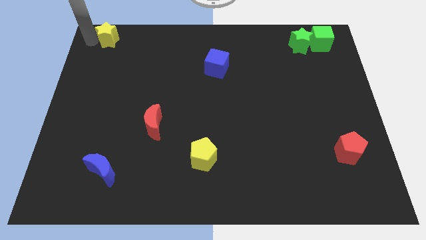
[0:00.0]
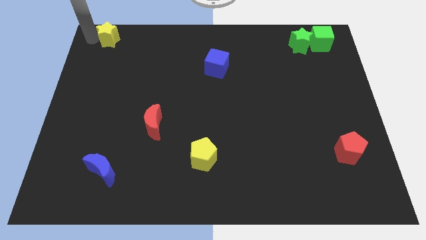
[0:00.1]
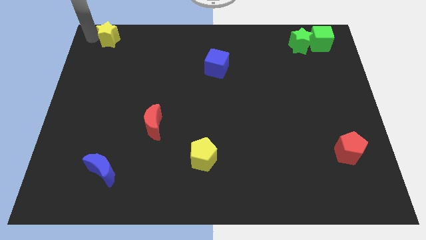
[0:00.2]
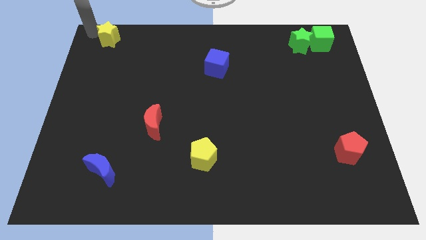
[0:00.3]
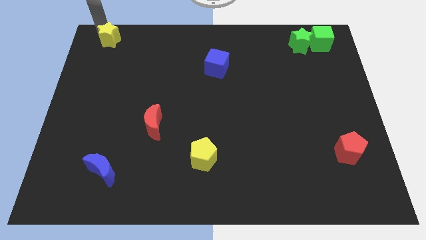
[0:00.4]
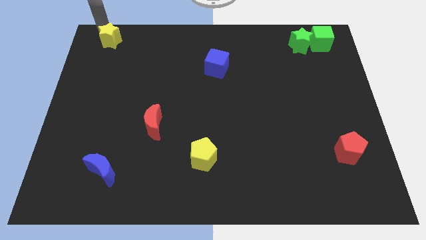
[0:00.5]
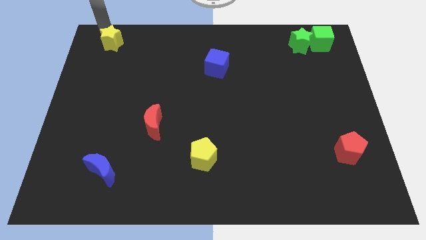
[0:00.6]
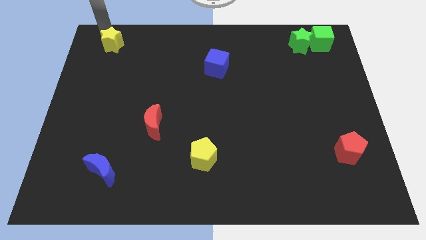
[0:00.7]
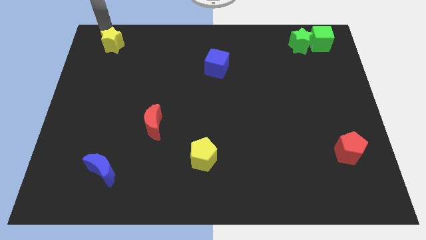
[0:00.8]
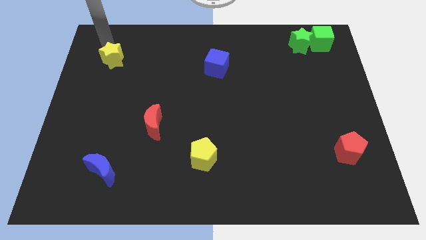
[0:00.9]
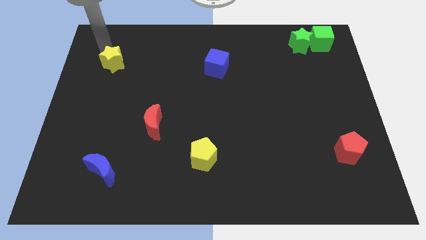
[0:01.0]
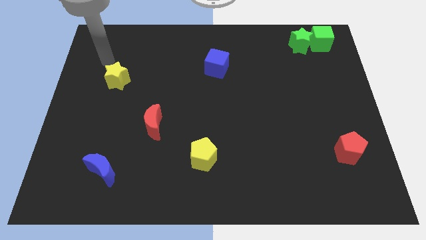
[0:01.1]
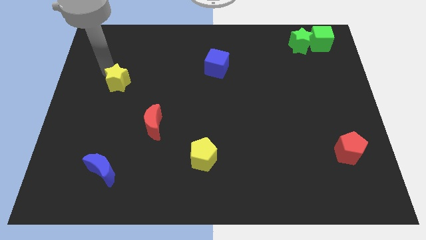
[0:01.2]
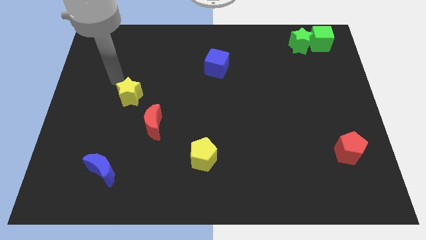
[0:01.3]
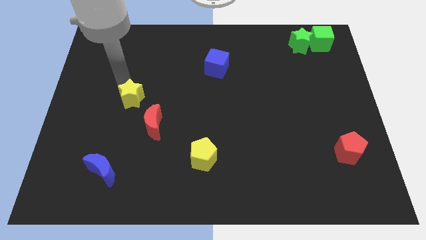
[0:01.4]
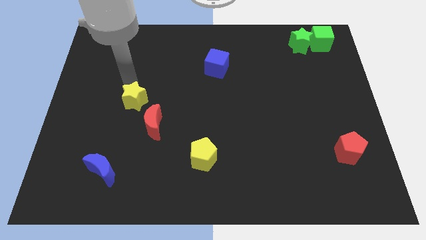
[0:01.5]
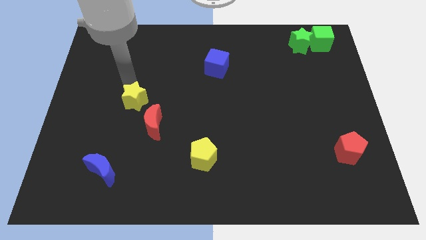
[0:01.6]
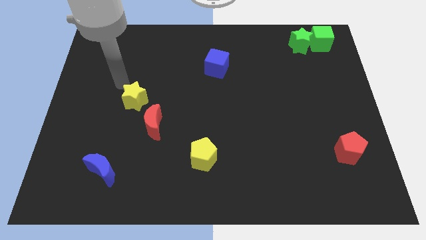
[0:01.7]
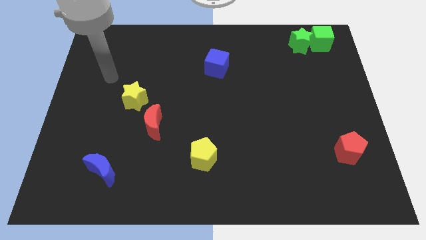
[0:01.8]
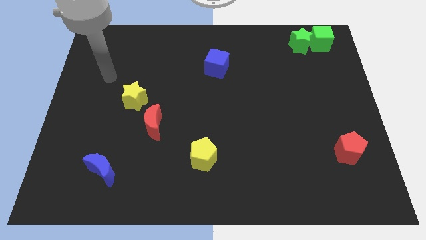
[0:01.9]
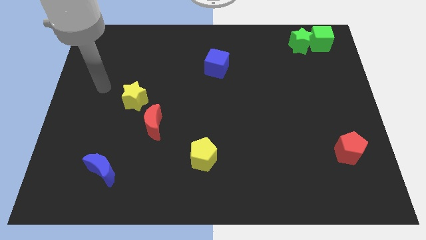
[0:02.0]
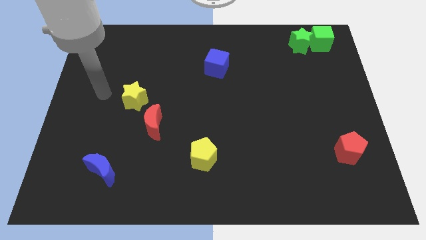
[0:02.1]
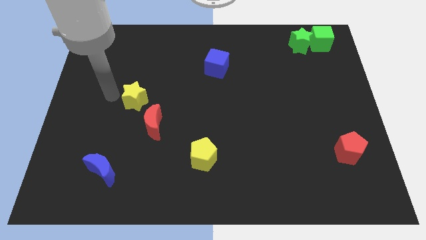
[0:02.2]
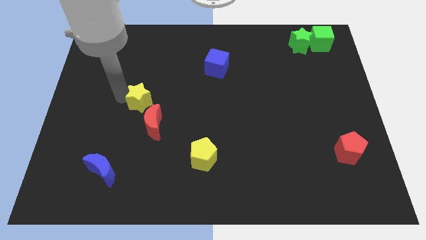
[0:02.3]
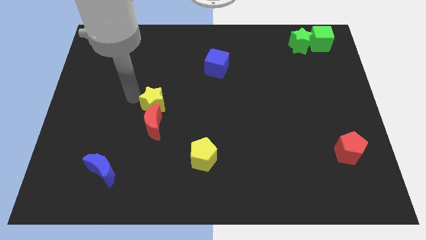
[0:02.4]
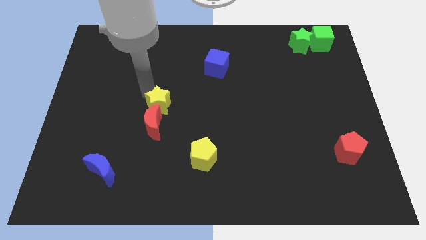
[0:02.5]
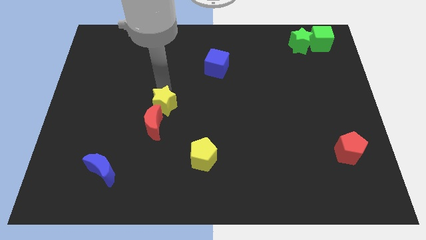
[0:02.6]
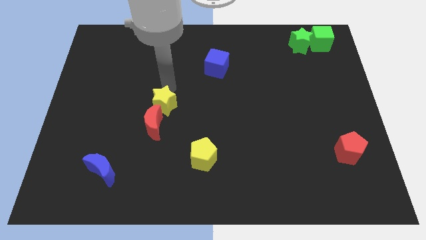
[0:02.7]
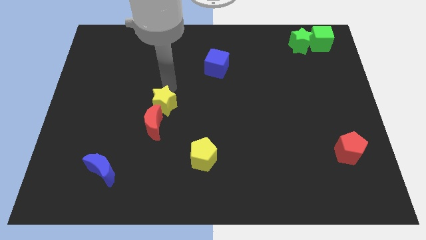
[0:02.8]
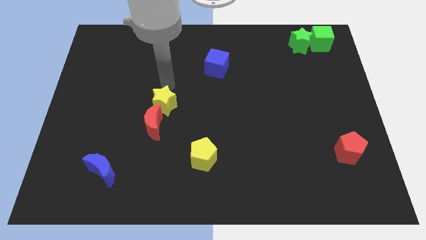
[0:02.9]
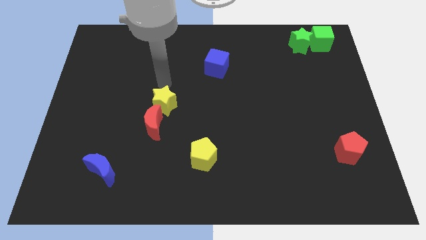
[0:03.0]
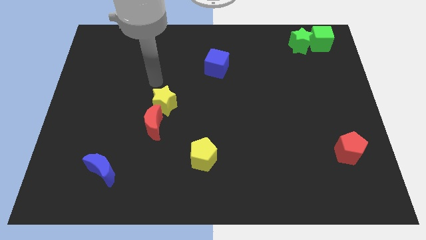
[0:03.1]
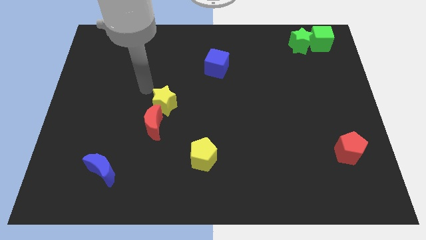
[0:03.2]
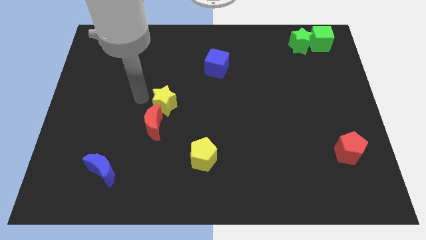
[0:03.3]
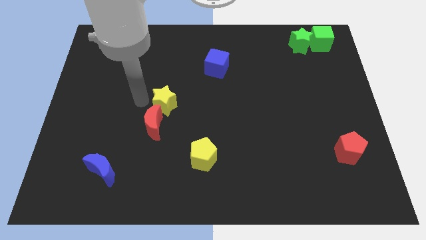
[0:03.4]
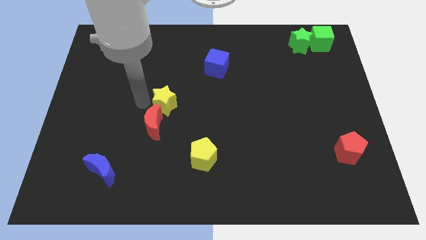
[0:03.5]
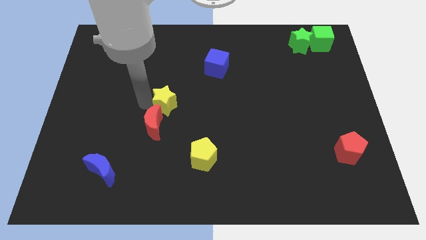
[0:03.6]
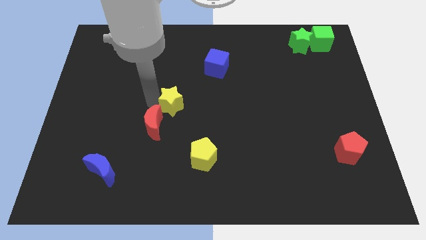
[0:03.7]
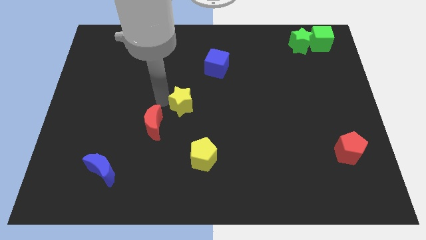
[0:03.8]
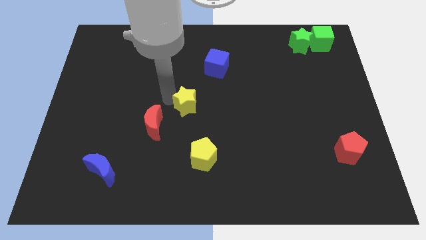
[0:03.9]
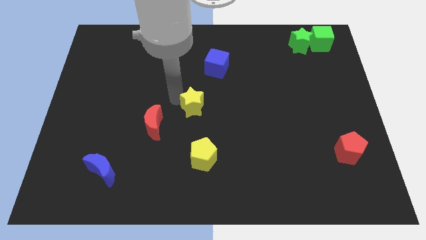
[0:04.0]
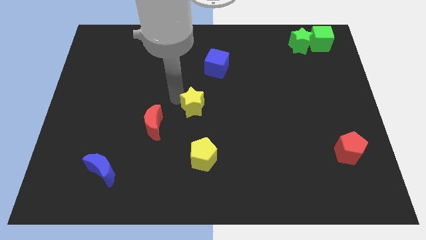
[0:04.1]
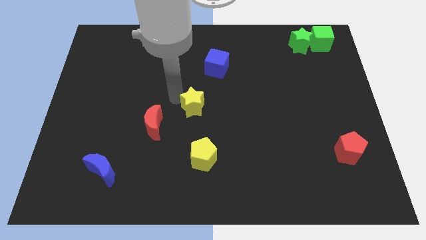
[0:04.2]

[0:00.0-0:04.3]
place the yellow star at the center

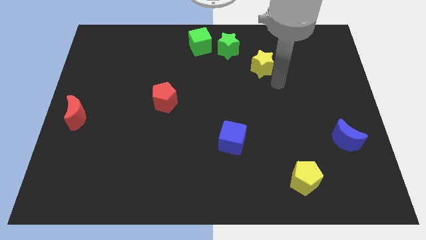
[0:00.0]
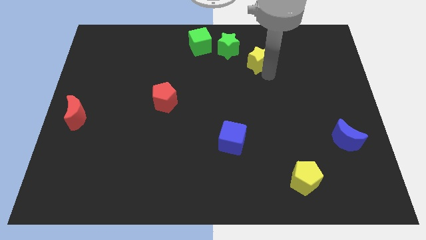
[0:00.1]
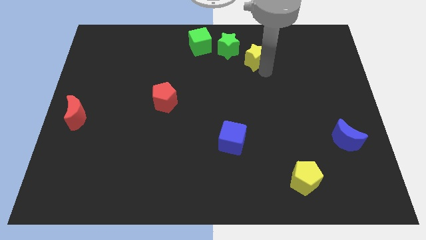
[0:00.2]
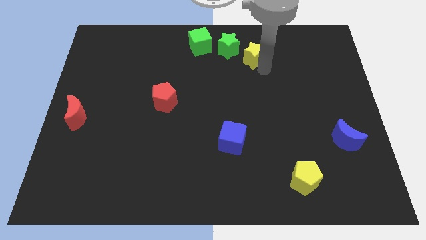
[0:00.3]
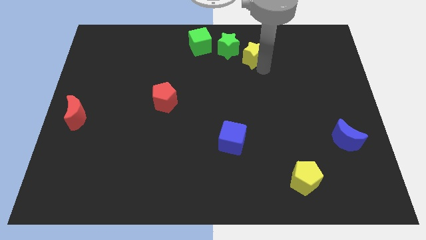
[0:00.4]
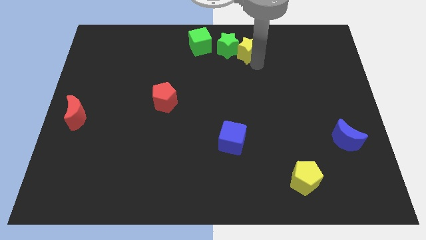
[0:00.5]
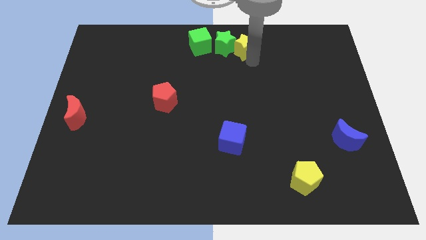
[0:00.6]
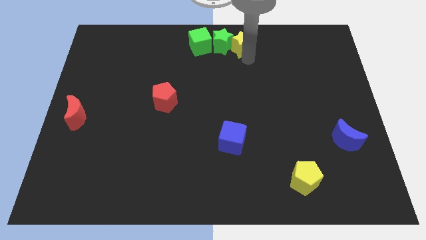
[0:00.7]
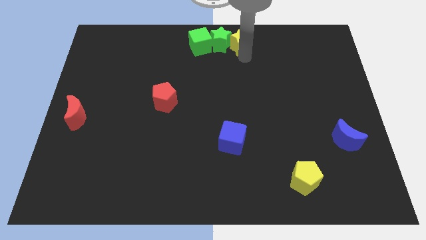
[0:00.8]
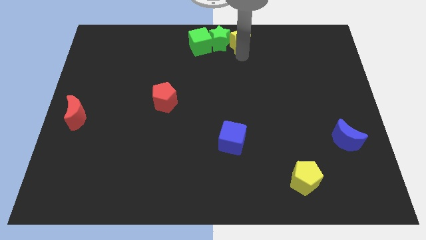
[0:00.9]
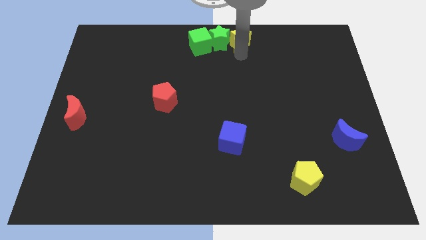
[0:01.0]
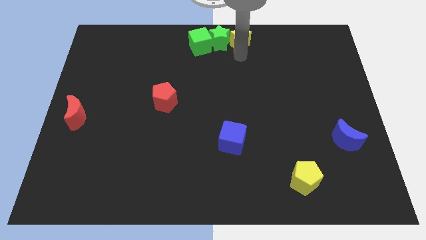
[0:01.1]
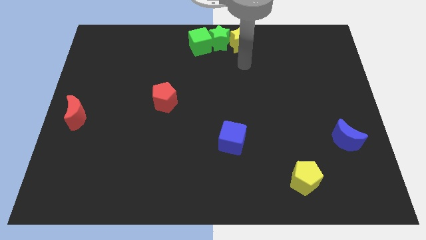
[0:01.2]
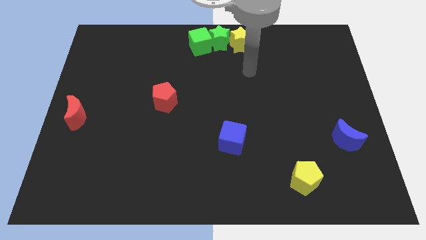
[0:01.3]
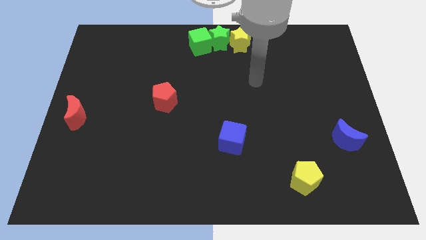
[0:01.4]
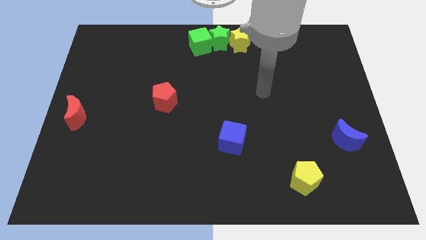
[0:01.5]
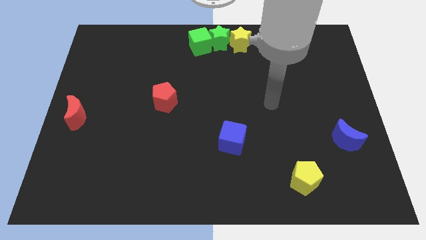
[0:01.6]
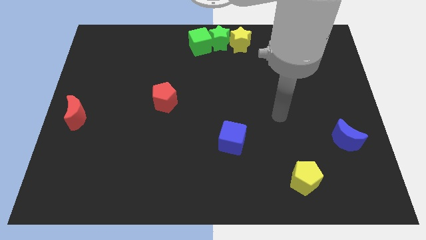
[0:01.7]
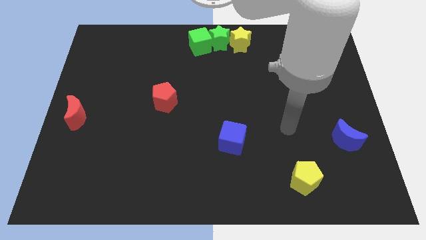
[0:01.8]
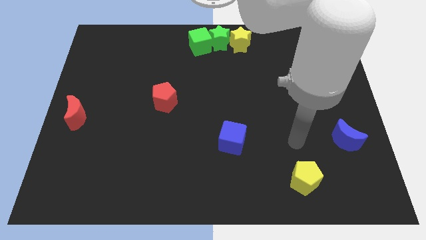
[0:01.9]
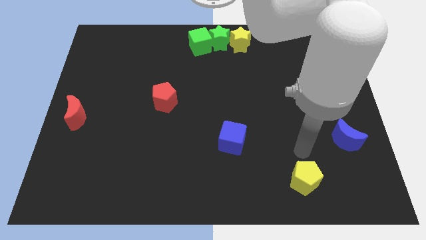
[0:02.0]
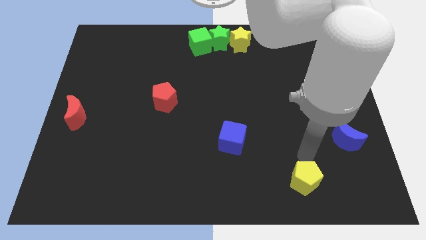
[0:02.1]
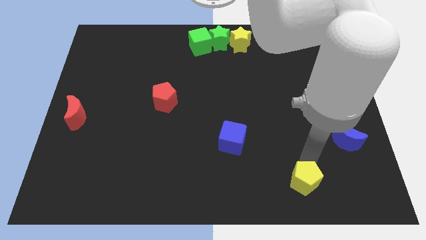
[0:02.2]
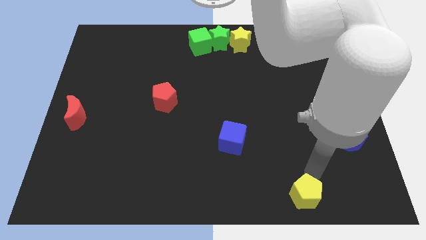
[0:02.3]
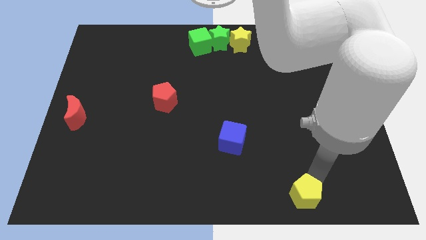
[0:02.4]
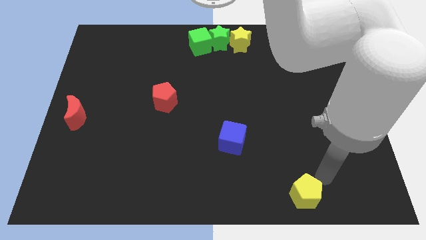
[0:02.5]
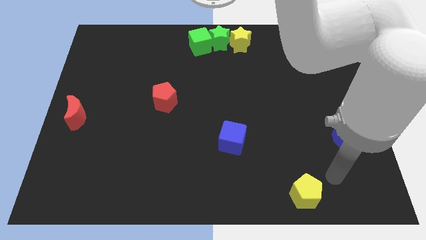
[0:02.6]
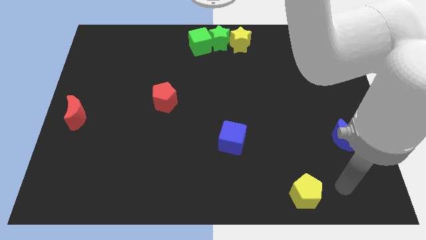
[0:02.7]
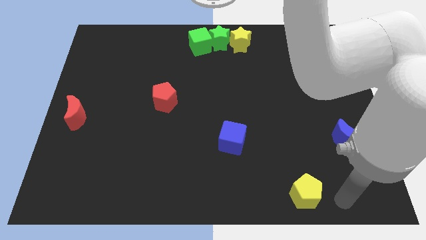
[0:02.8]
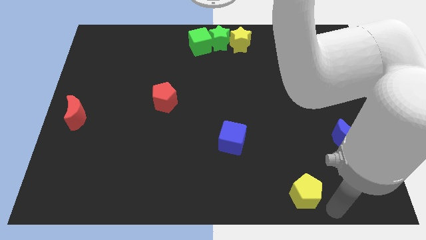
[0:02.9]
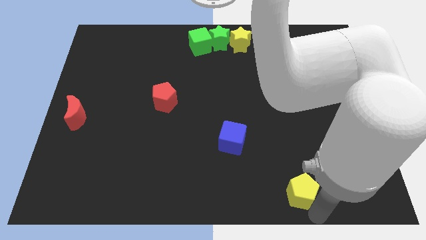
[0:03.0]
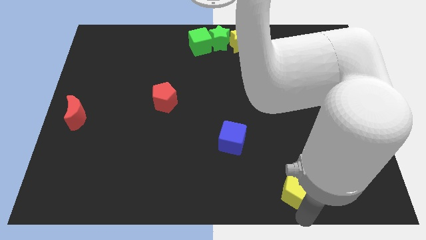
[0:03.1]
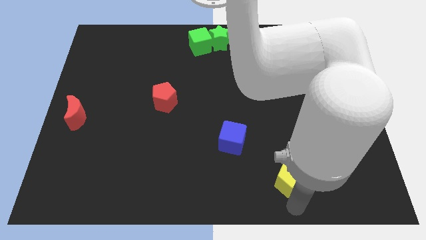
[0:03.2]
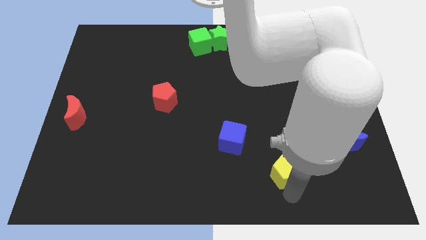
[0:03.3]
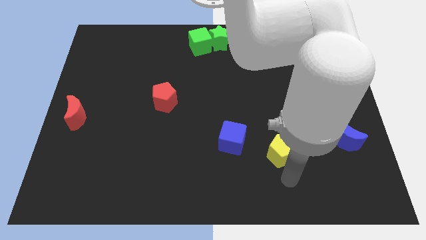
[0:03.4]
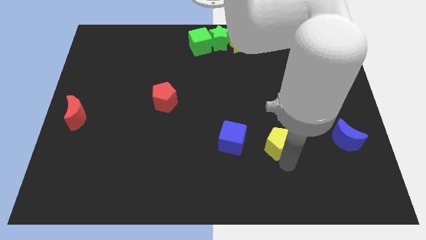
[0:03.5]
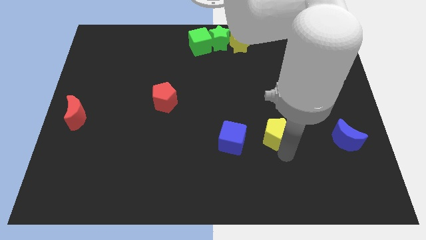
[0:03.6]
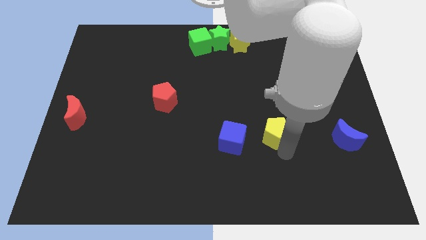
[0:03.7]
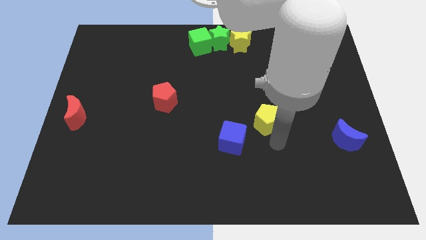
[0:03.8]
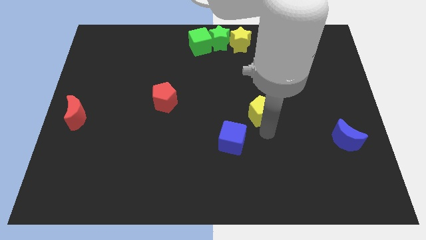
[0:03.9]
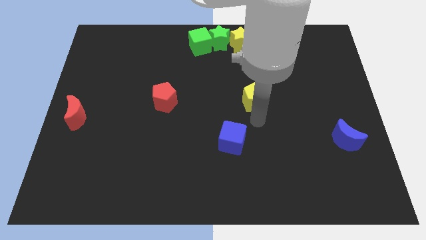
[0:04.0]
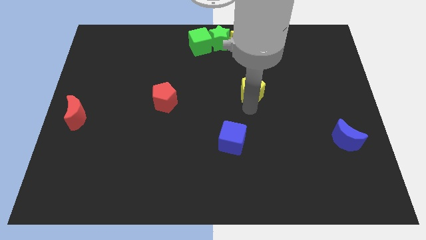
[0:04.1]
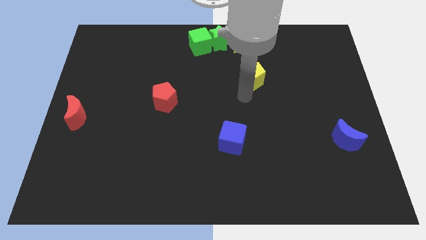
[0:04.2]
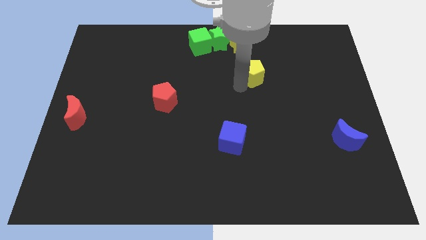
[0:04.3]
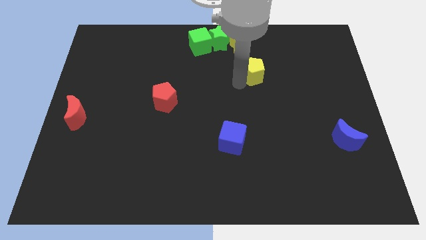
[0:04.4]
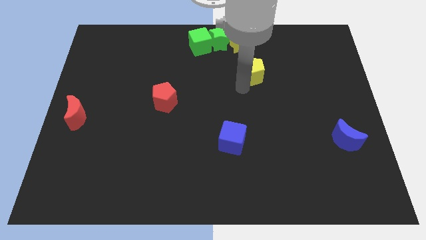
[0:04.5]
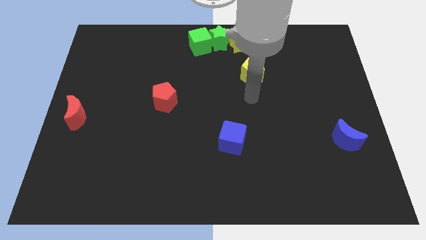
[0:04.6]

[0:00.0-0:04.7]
put the yellow pentagon on the bottom side of the yellow star
